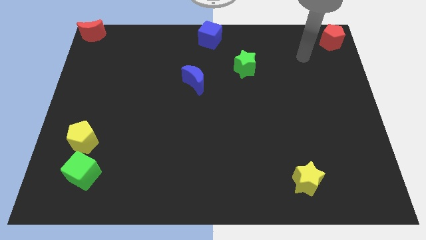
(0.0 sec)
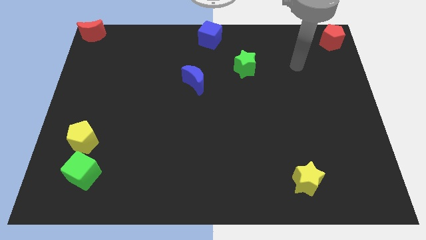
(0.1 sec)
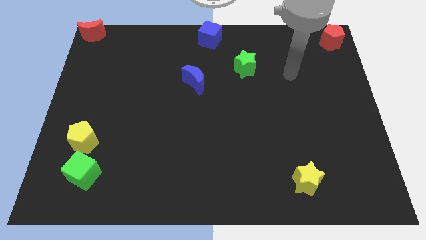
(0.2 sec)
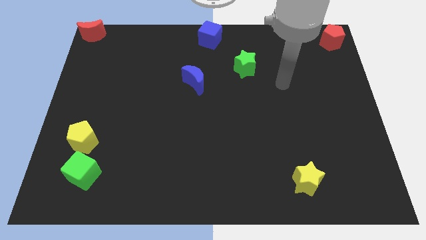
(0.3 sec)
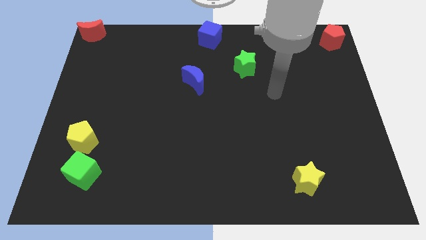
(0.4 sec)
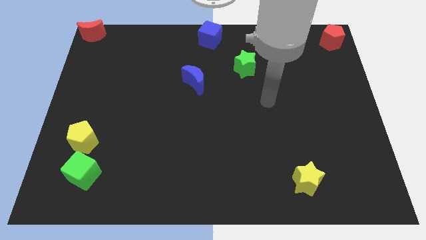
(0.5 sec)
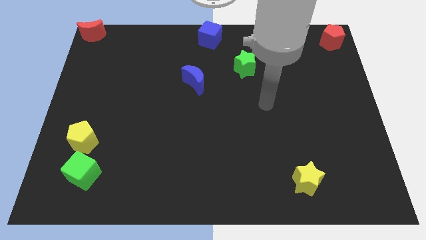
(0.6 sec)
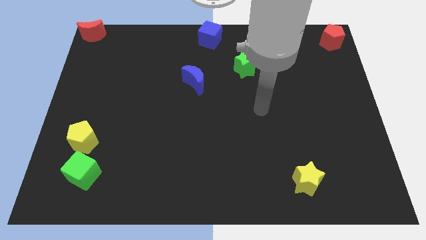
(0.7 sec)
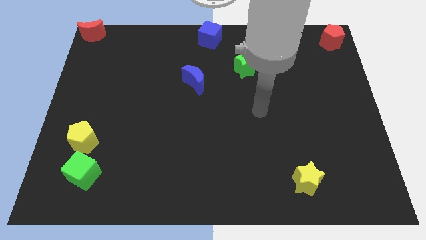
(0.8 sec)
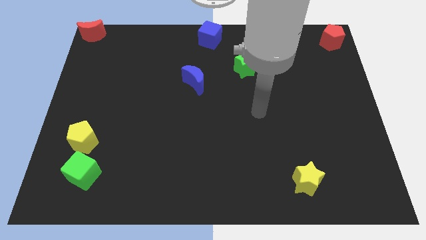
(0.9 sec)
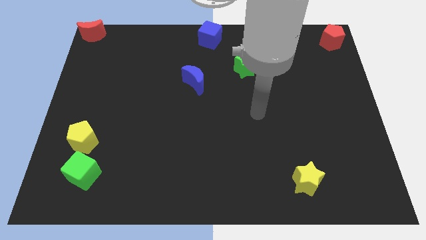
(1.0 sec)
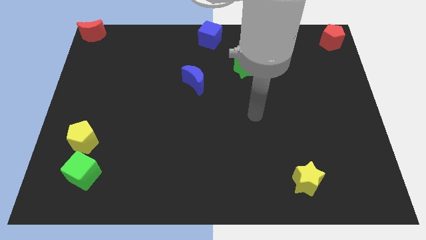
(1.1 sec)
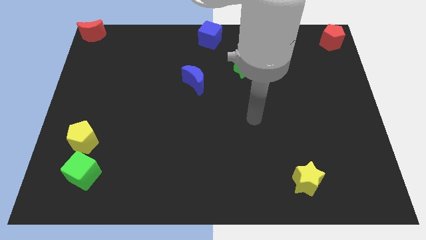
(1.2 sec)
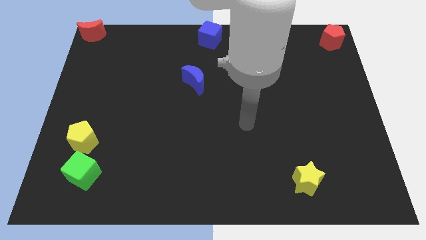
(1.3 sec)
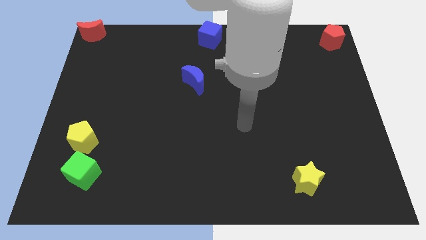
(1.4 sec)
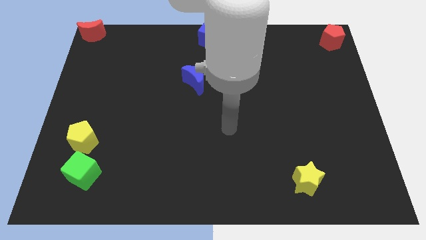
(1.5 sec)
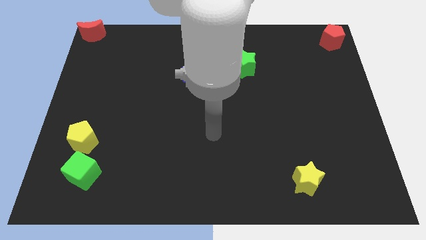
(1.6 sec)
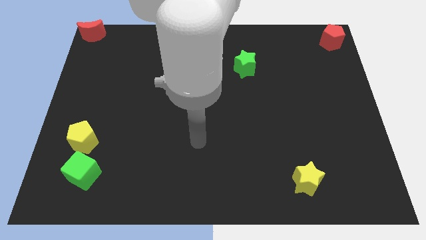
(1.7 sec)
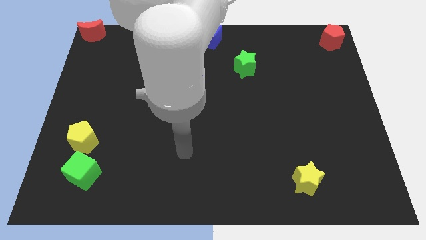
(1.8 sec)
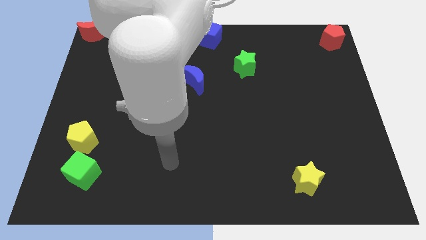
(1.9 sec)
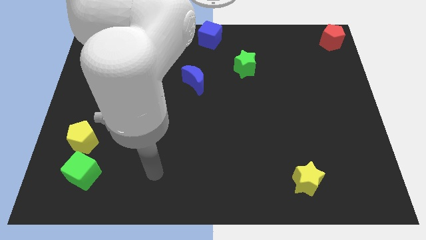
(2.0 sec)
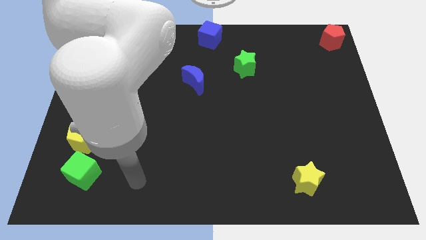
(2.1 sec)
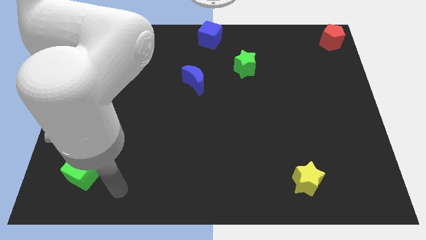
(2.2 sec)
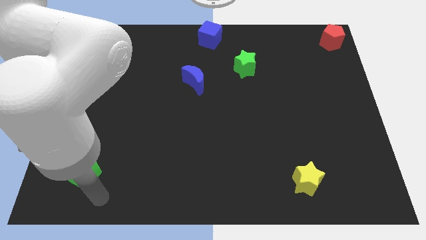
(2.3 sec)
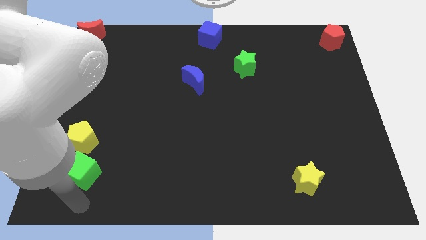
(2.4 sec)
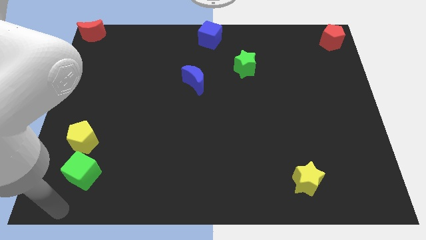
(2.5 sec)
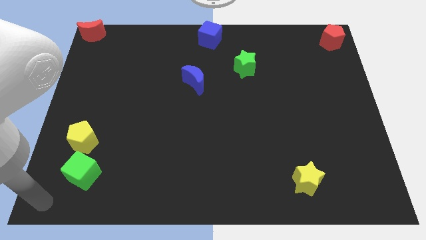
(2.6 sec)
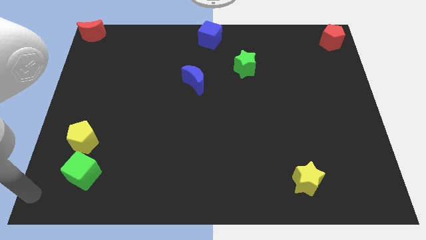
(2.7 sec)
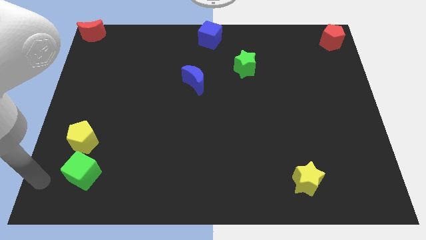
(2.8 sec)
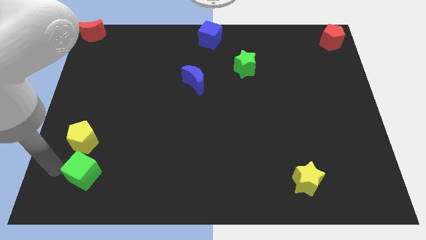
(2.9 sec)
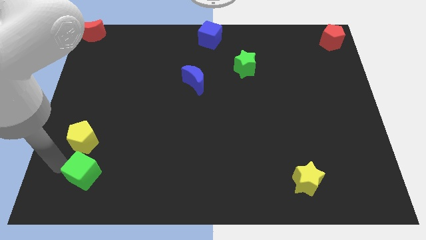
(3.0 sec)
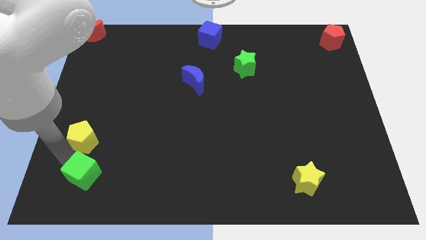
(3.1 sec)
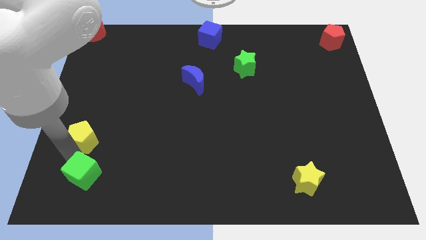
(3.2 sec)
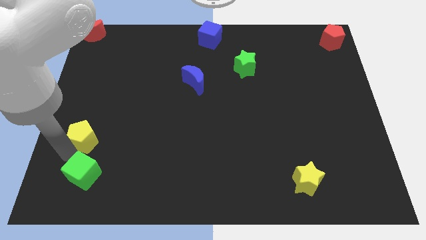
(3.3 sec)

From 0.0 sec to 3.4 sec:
move your arm to the top of the green cube

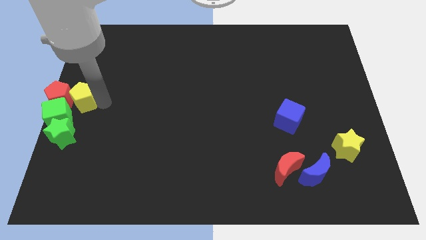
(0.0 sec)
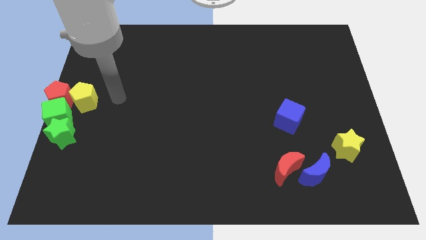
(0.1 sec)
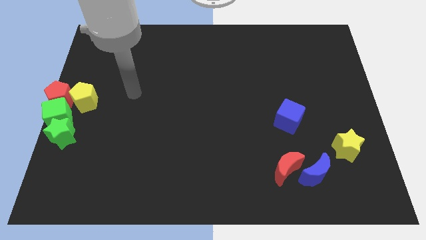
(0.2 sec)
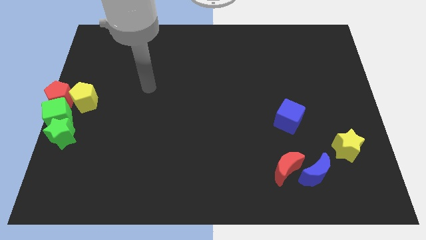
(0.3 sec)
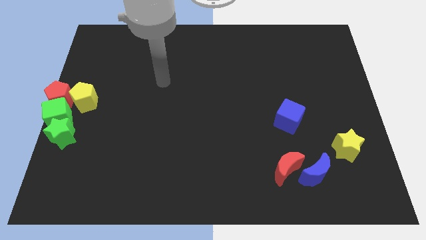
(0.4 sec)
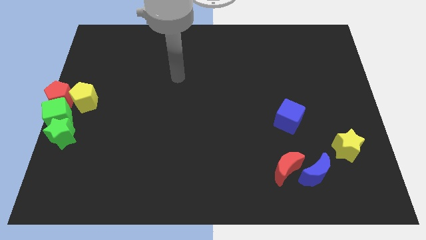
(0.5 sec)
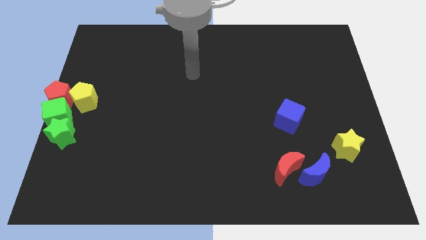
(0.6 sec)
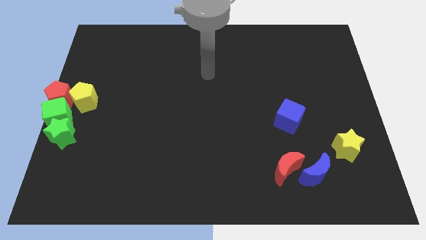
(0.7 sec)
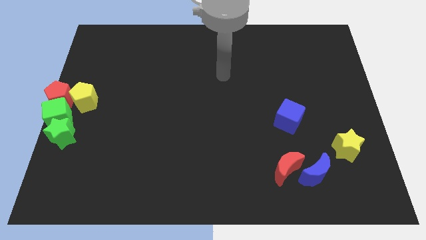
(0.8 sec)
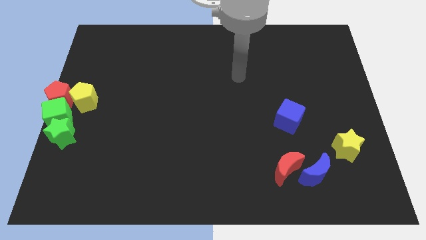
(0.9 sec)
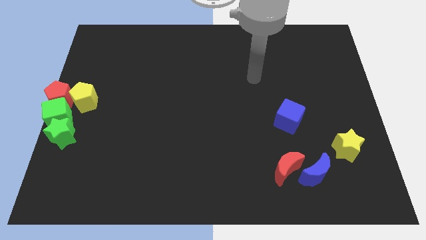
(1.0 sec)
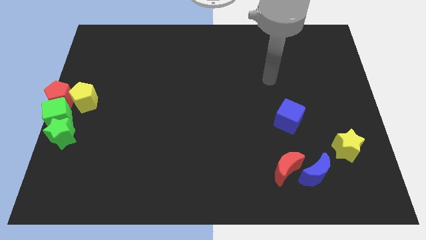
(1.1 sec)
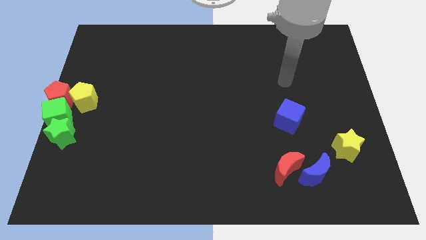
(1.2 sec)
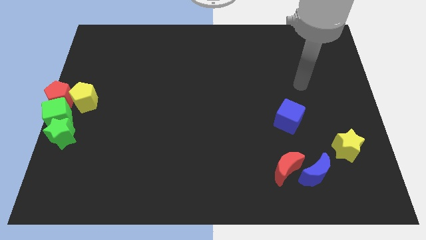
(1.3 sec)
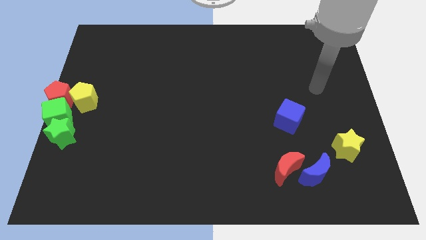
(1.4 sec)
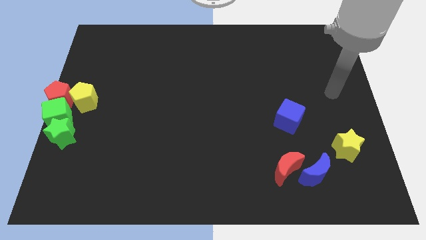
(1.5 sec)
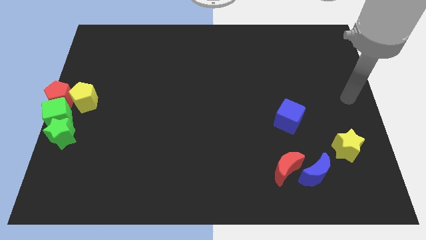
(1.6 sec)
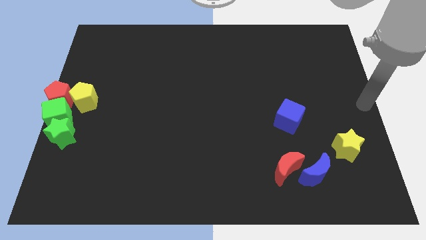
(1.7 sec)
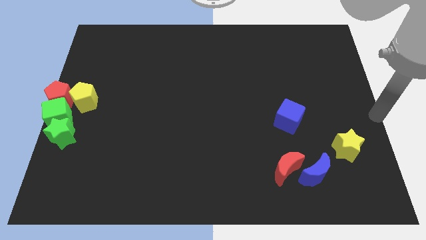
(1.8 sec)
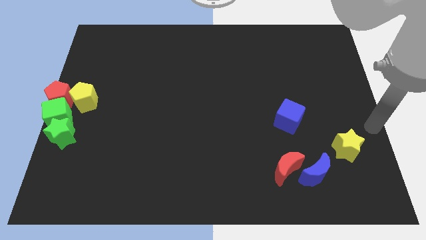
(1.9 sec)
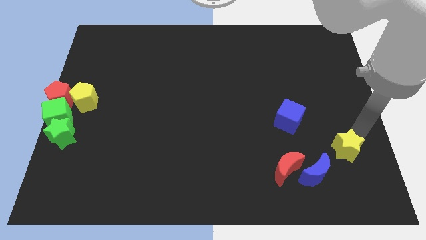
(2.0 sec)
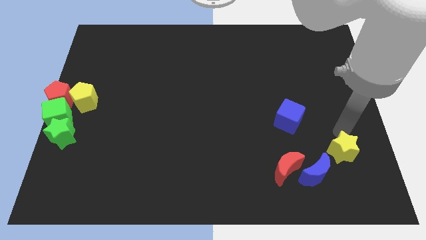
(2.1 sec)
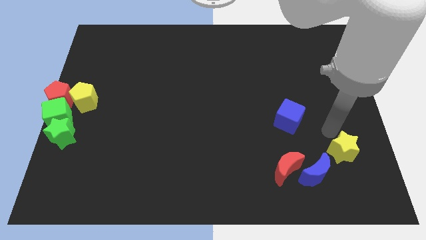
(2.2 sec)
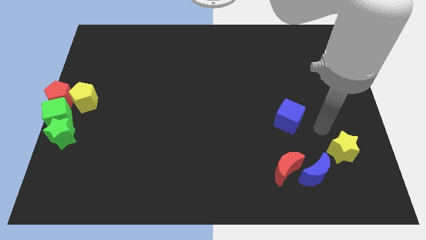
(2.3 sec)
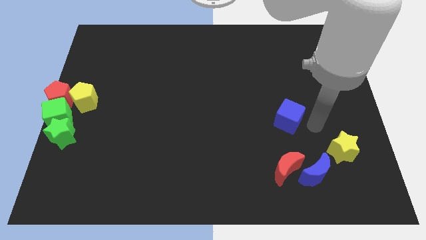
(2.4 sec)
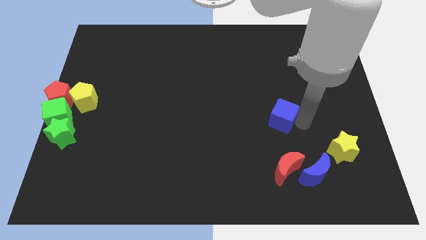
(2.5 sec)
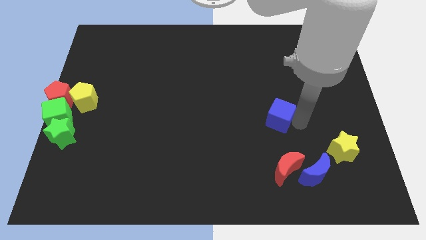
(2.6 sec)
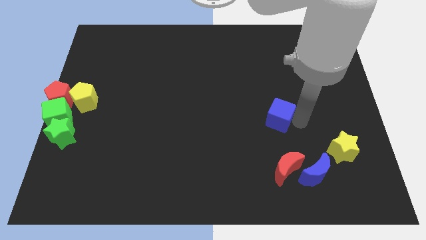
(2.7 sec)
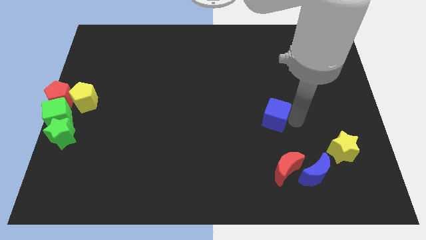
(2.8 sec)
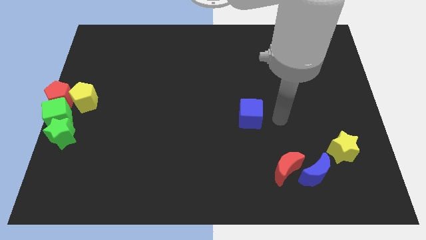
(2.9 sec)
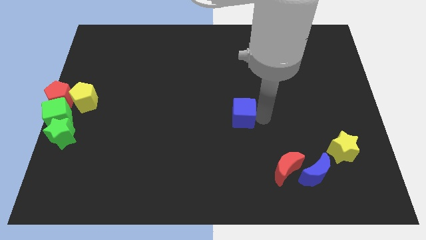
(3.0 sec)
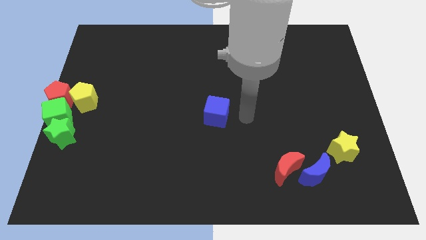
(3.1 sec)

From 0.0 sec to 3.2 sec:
place blue cube to the center of the board

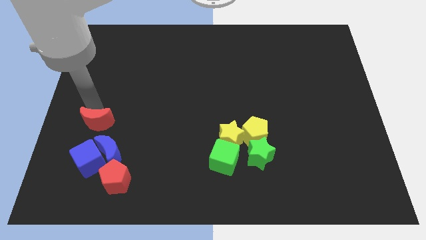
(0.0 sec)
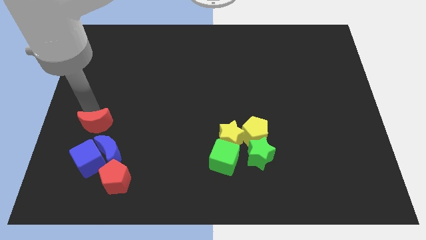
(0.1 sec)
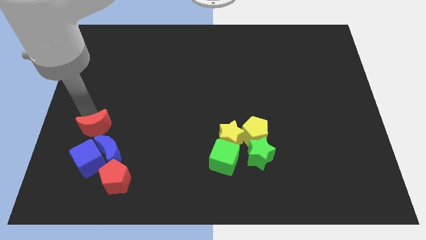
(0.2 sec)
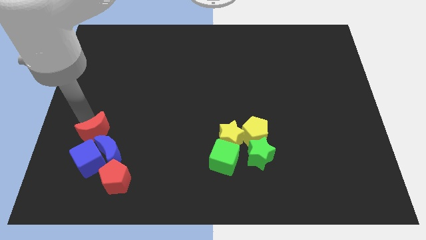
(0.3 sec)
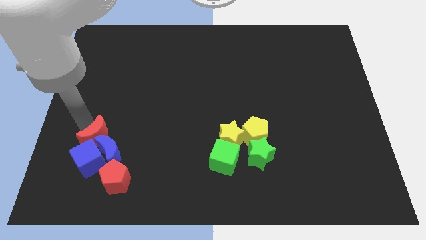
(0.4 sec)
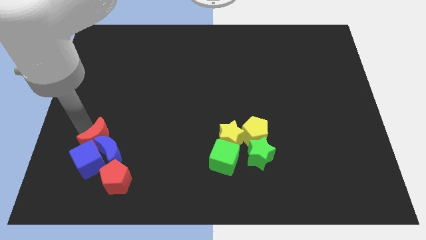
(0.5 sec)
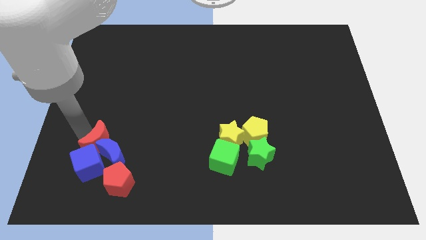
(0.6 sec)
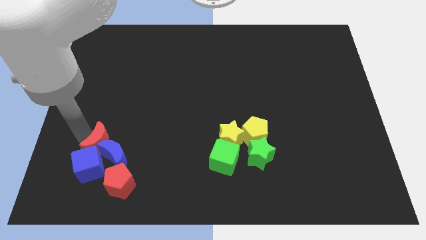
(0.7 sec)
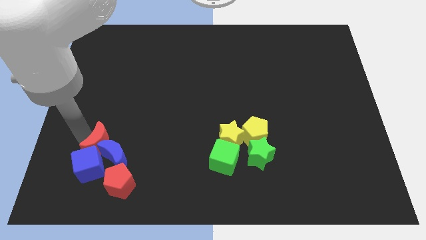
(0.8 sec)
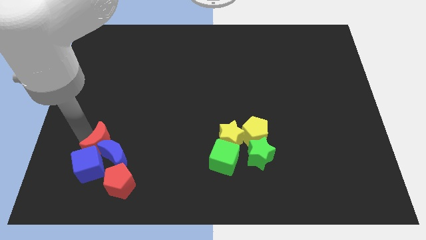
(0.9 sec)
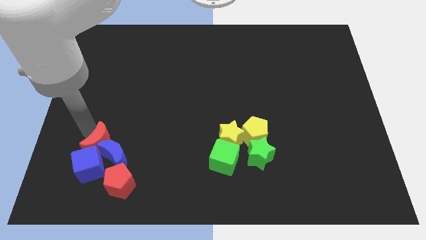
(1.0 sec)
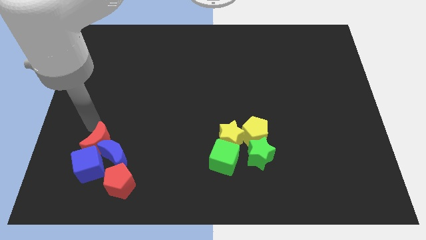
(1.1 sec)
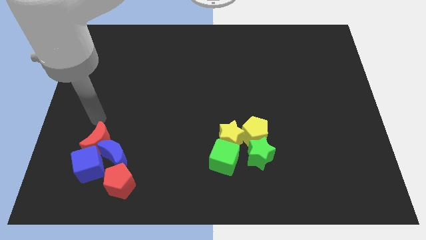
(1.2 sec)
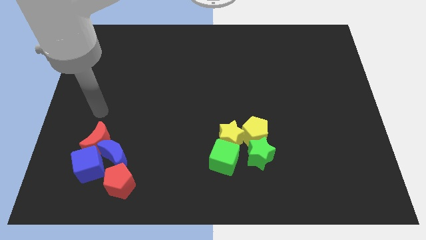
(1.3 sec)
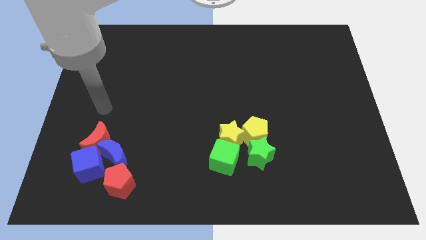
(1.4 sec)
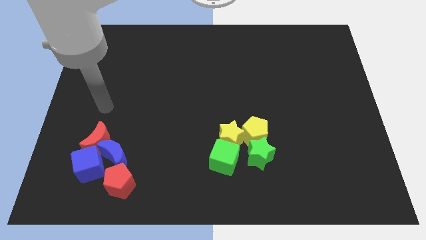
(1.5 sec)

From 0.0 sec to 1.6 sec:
push the red crescent to the group of blocks

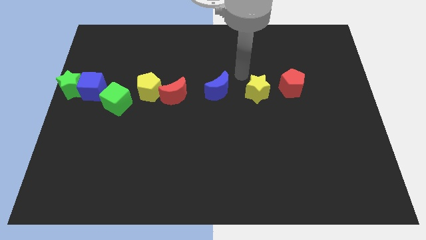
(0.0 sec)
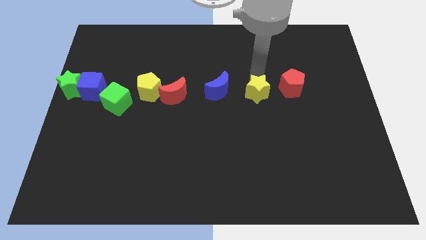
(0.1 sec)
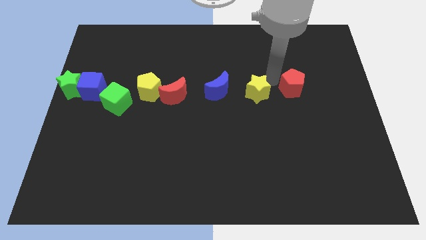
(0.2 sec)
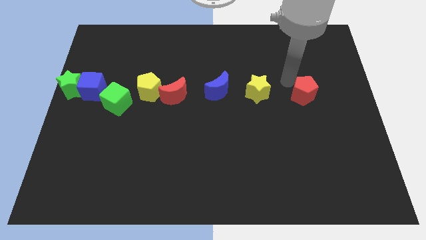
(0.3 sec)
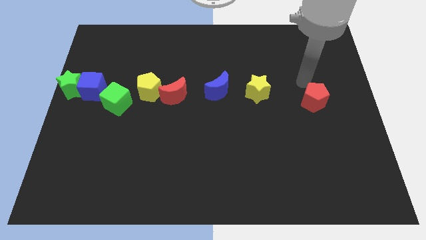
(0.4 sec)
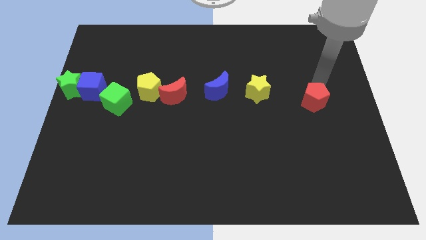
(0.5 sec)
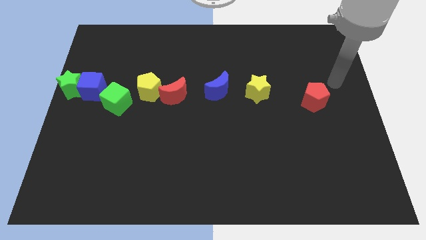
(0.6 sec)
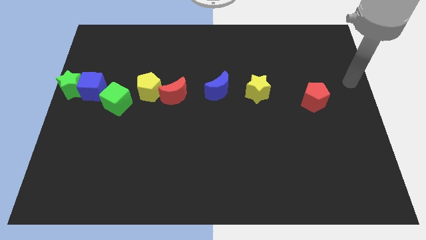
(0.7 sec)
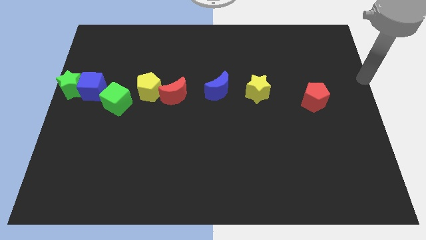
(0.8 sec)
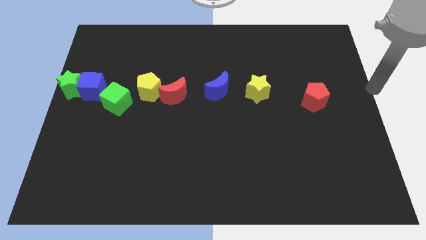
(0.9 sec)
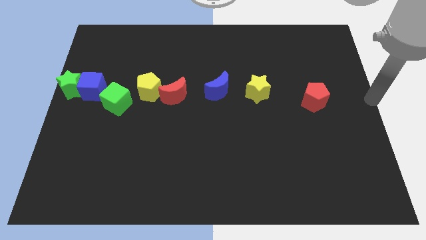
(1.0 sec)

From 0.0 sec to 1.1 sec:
slide the red pentagon towards the center right
